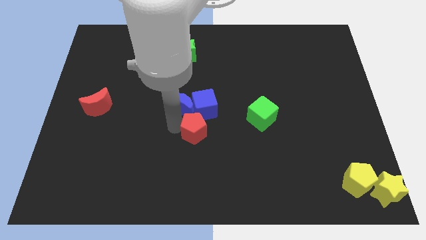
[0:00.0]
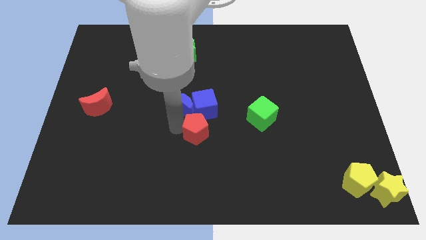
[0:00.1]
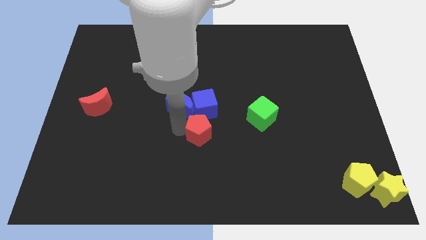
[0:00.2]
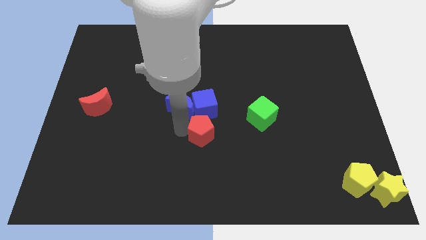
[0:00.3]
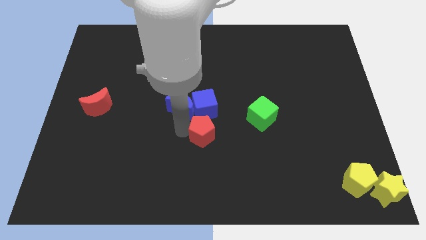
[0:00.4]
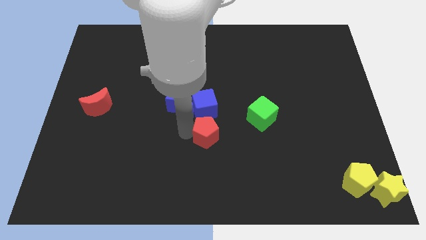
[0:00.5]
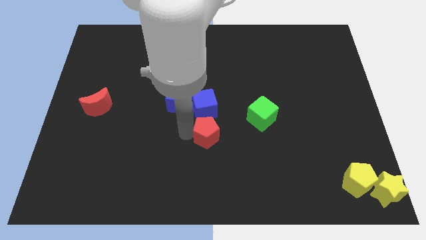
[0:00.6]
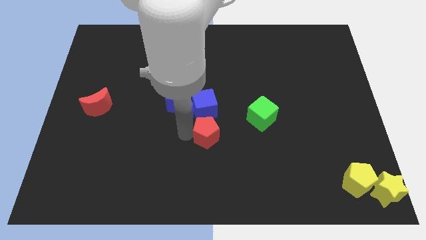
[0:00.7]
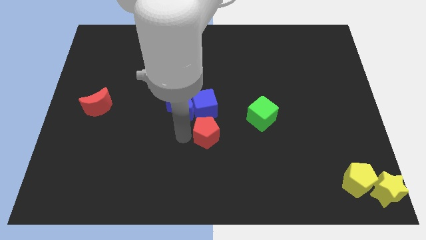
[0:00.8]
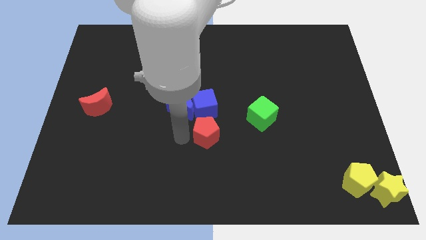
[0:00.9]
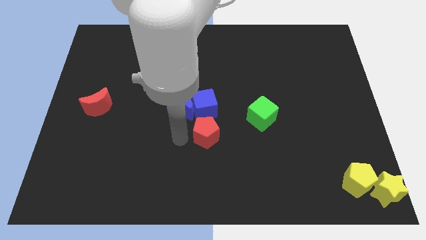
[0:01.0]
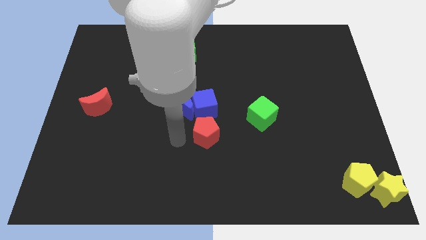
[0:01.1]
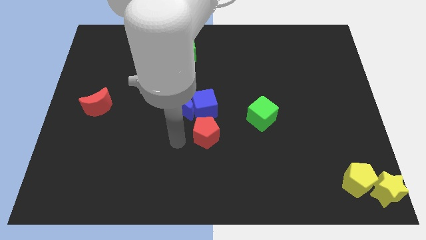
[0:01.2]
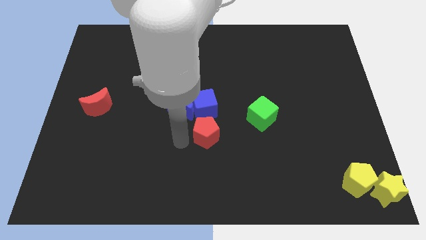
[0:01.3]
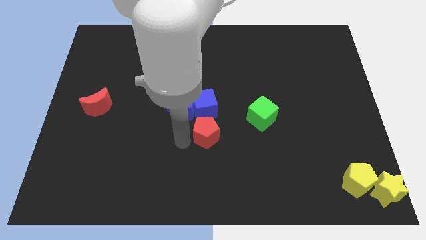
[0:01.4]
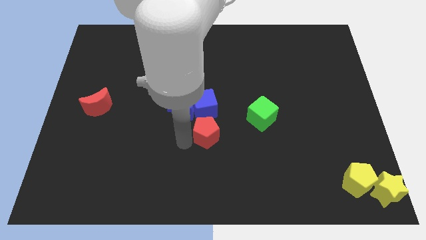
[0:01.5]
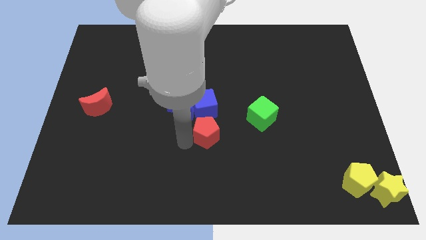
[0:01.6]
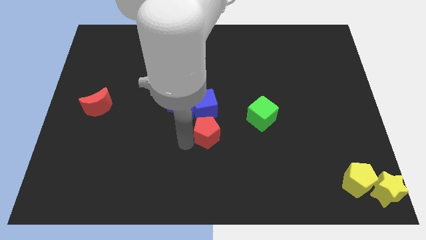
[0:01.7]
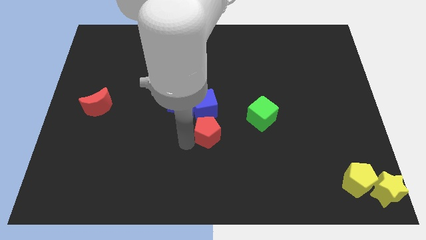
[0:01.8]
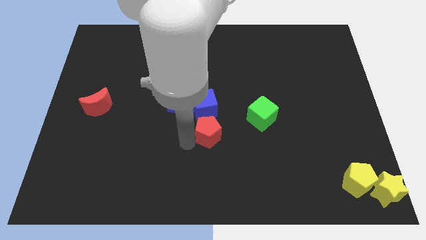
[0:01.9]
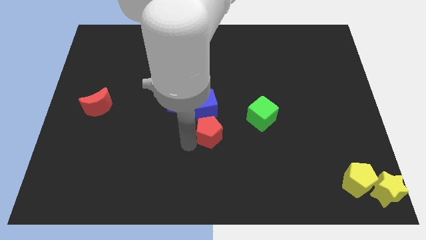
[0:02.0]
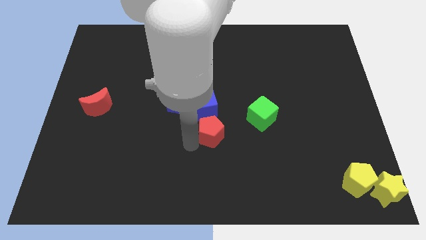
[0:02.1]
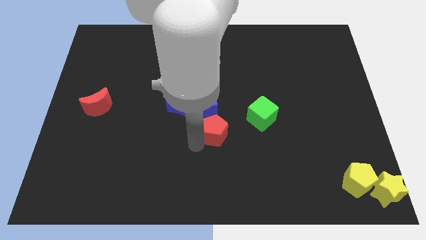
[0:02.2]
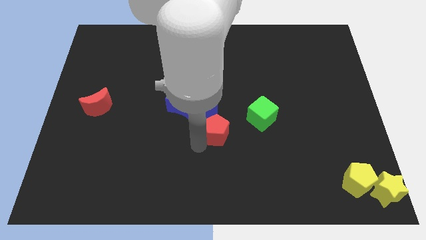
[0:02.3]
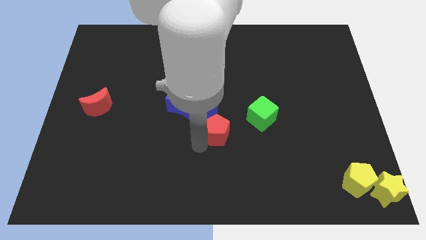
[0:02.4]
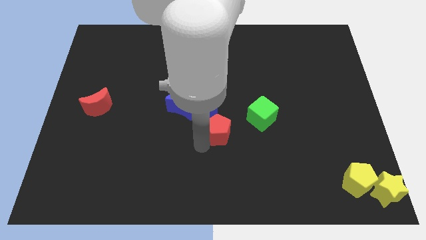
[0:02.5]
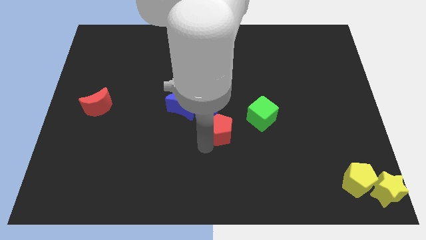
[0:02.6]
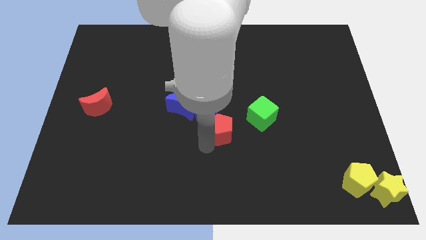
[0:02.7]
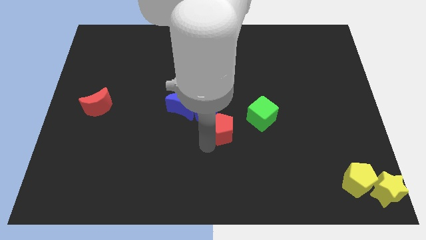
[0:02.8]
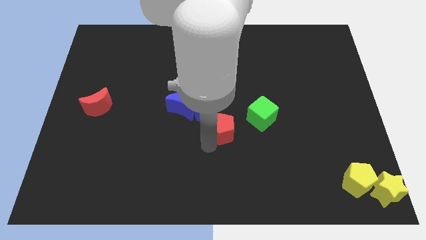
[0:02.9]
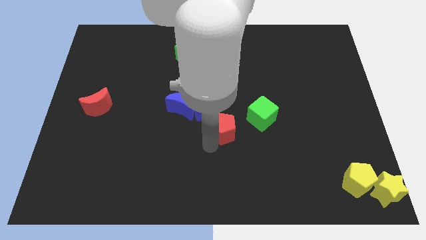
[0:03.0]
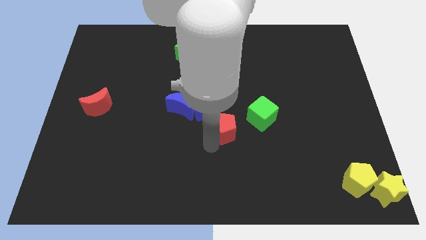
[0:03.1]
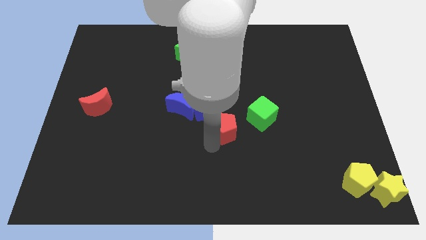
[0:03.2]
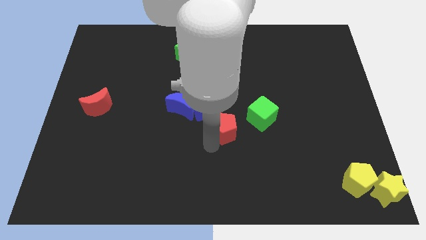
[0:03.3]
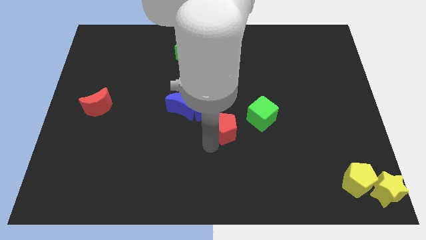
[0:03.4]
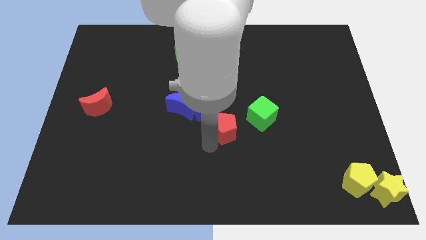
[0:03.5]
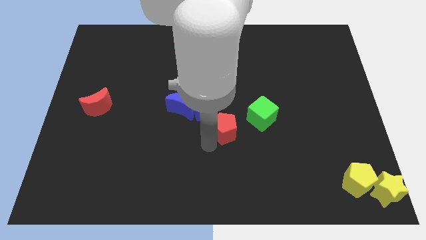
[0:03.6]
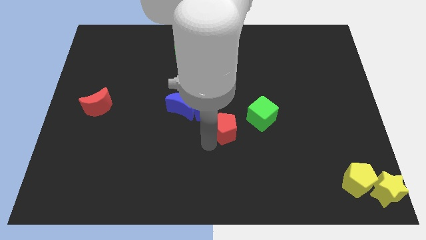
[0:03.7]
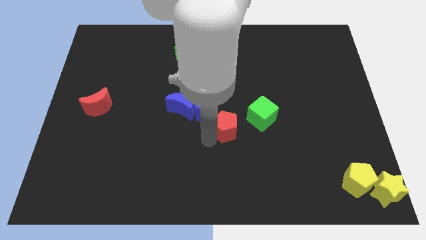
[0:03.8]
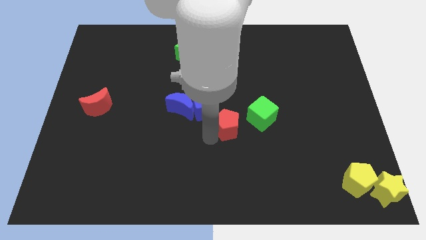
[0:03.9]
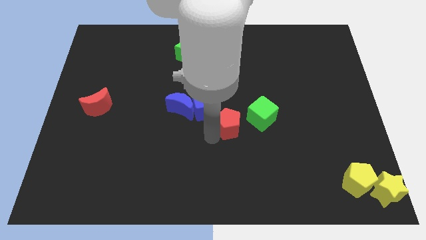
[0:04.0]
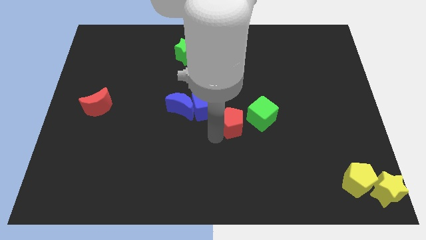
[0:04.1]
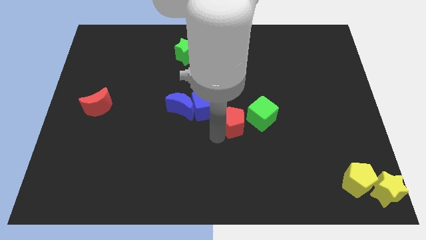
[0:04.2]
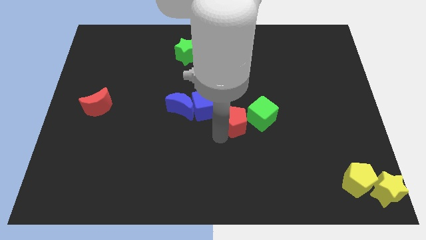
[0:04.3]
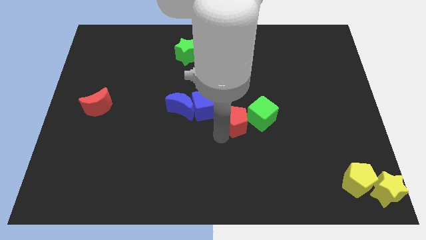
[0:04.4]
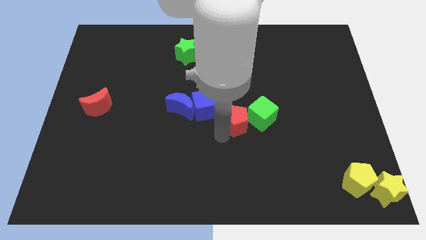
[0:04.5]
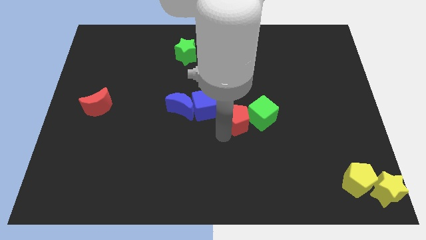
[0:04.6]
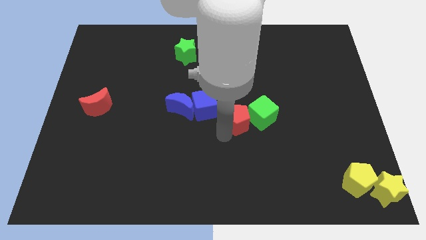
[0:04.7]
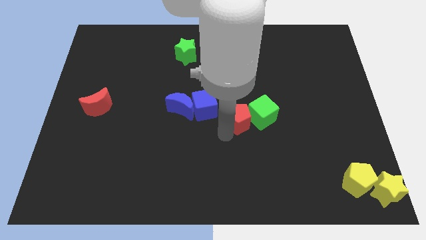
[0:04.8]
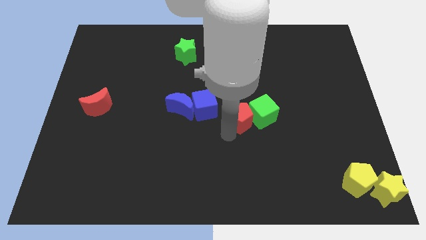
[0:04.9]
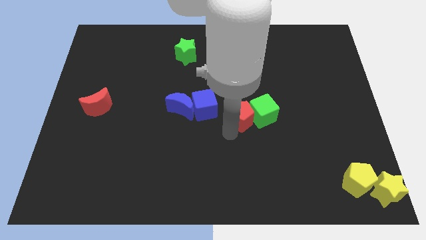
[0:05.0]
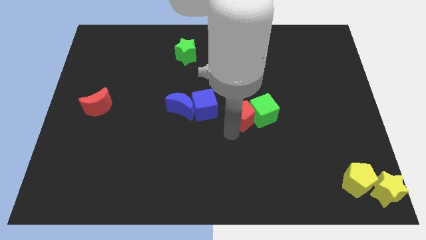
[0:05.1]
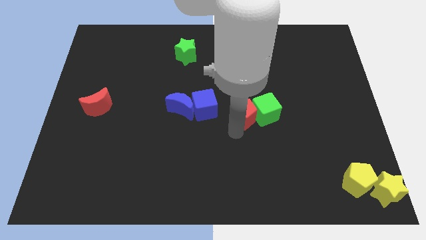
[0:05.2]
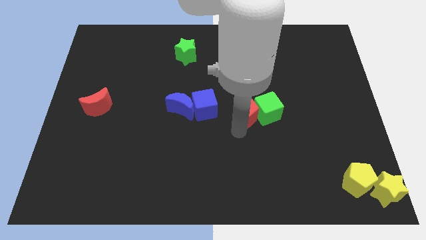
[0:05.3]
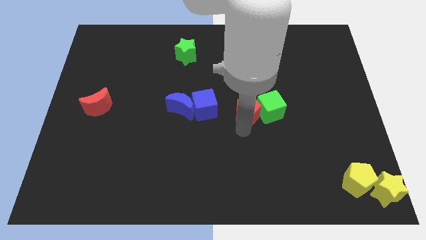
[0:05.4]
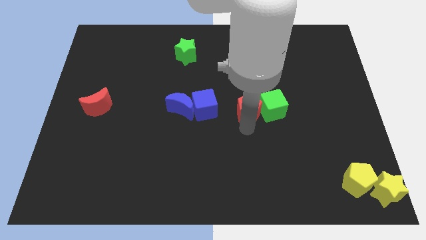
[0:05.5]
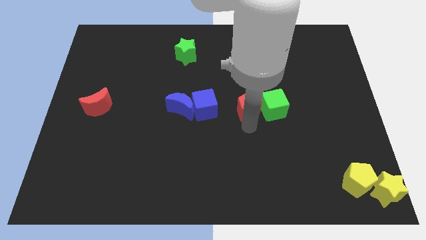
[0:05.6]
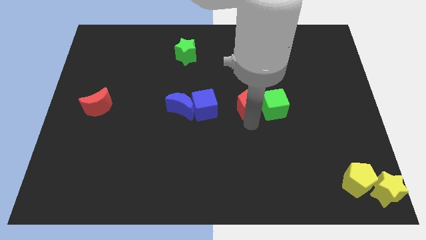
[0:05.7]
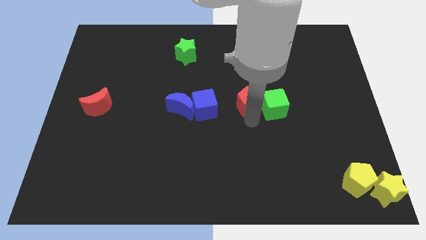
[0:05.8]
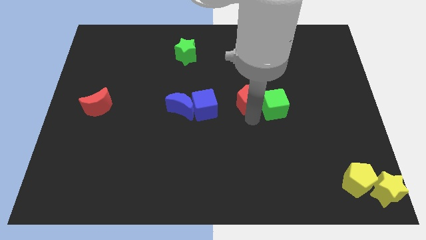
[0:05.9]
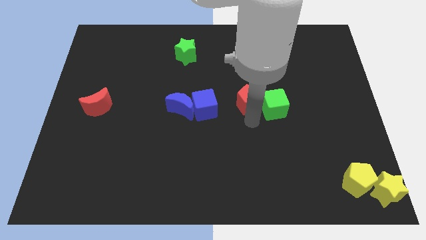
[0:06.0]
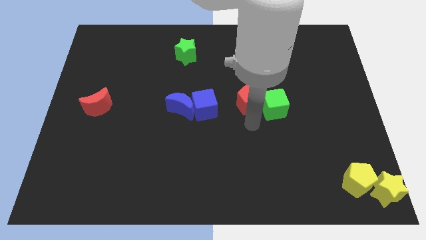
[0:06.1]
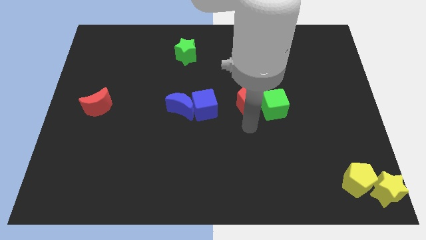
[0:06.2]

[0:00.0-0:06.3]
push the red pentagon into the green cube

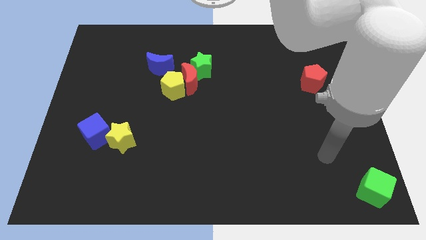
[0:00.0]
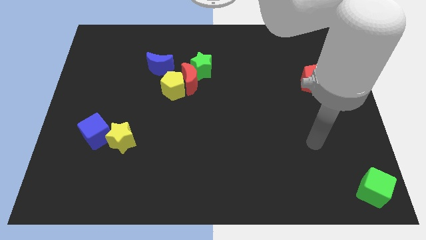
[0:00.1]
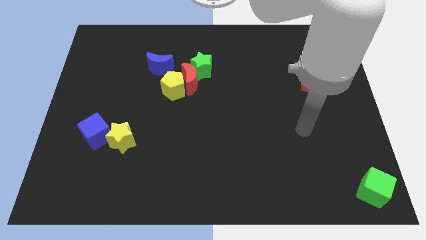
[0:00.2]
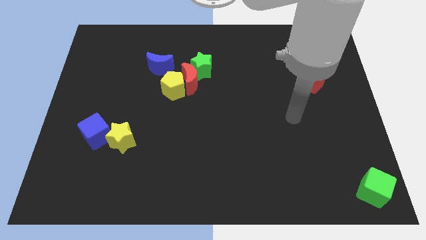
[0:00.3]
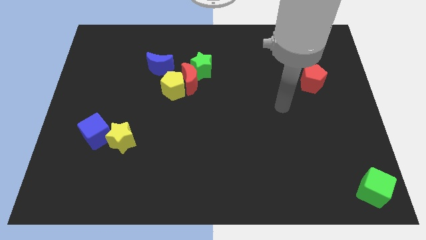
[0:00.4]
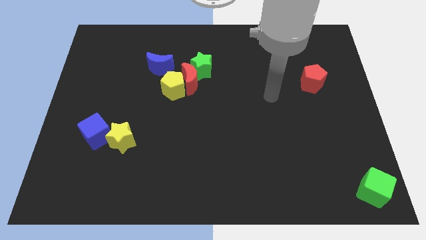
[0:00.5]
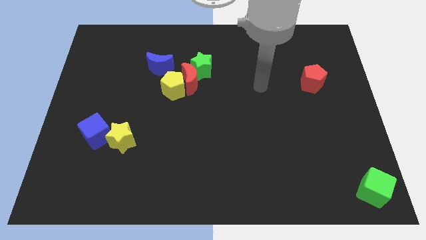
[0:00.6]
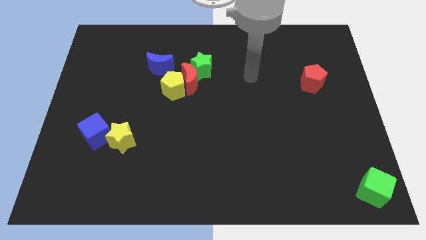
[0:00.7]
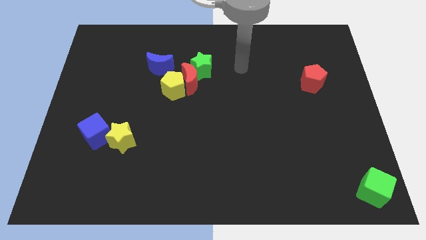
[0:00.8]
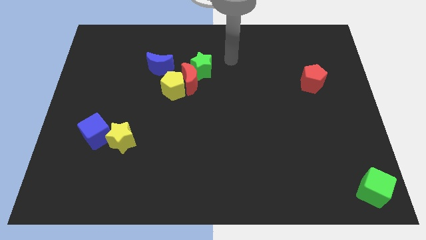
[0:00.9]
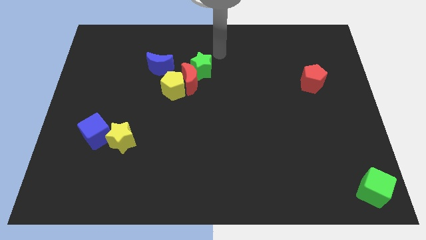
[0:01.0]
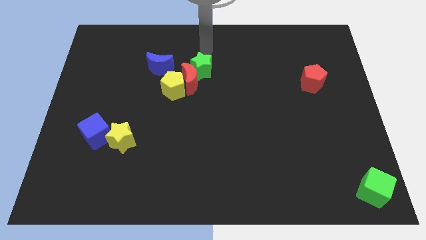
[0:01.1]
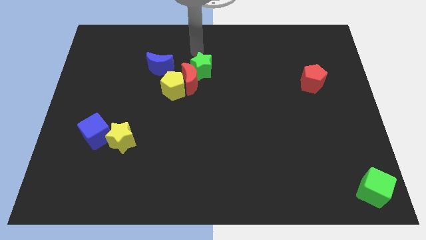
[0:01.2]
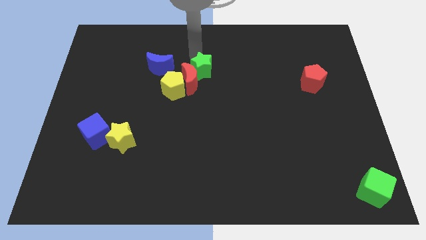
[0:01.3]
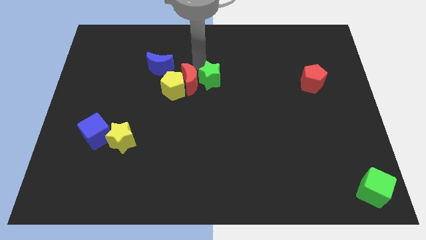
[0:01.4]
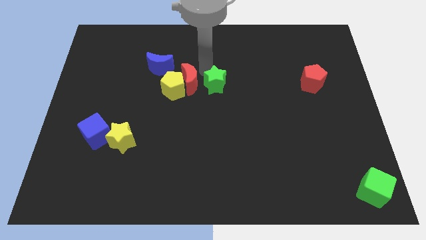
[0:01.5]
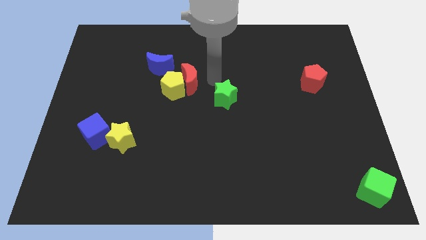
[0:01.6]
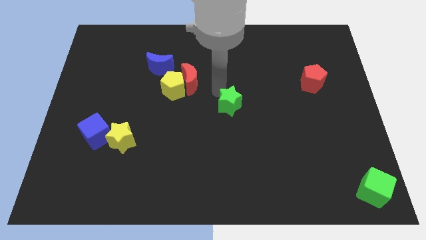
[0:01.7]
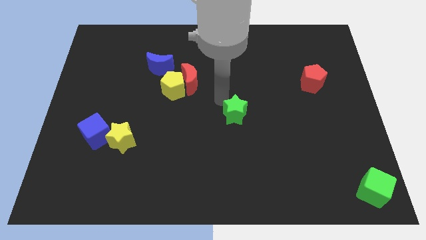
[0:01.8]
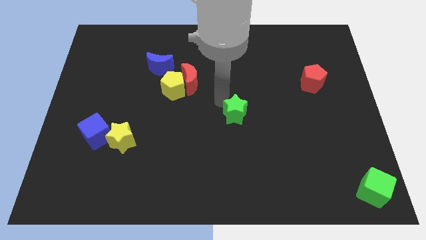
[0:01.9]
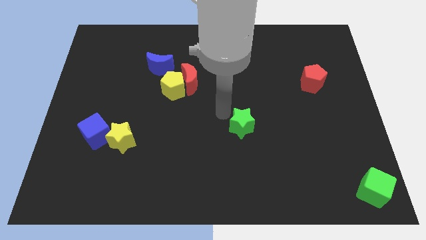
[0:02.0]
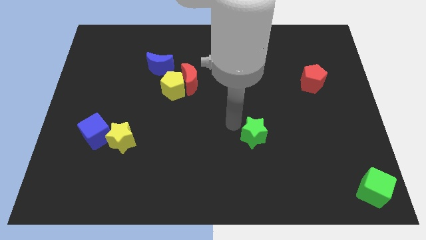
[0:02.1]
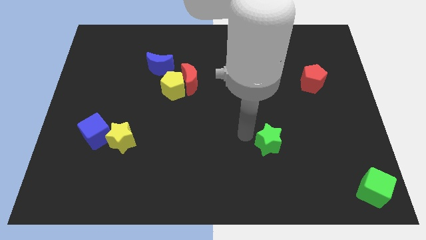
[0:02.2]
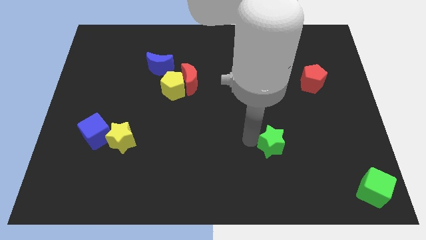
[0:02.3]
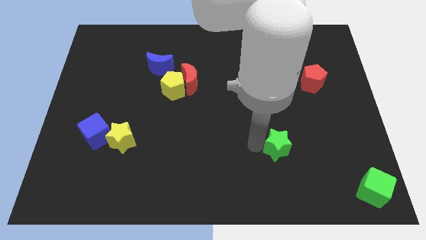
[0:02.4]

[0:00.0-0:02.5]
separate the green star from the group of blocks
